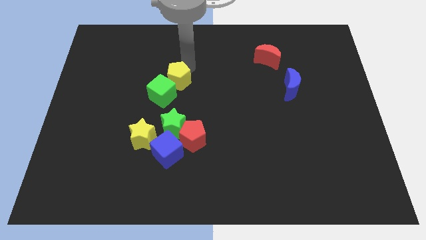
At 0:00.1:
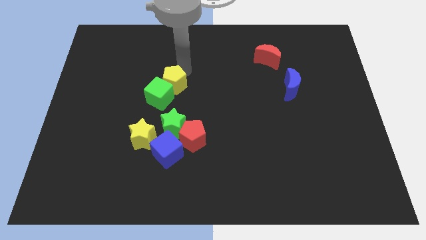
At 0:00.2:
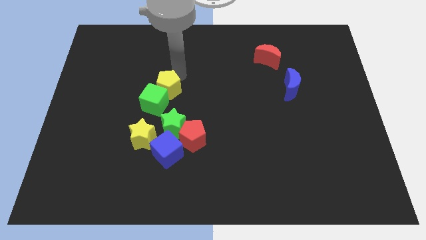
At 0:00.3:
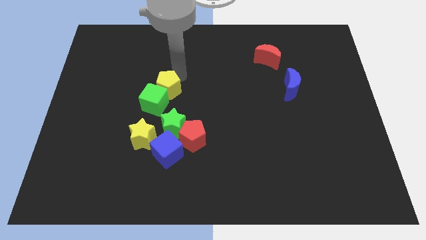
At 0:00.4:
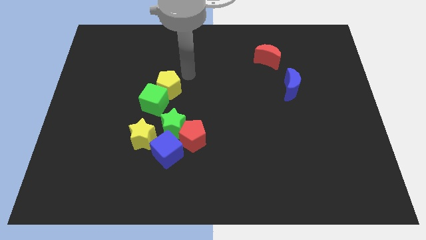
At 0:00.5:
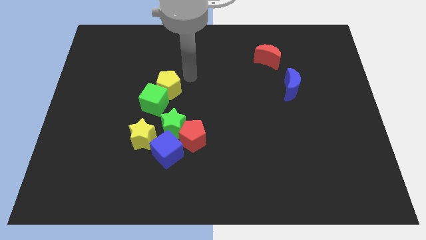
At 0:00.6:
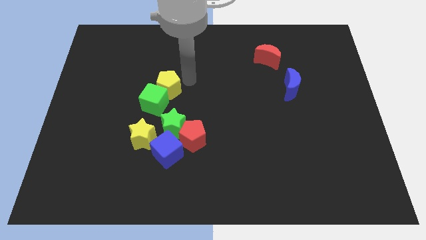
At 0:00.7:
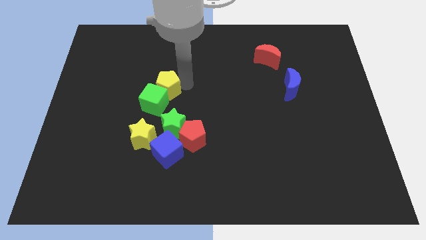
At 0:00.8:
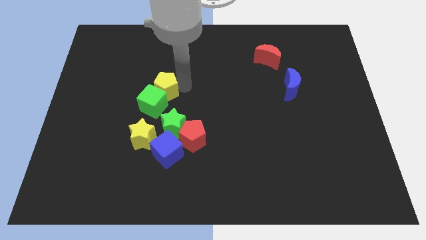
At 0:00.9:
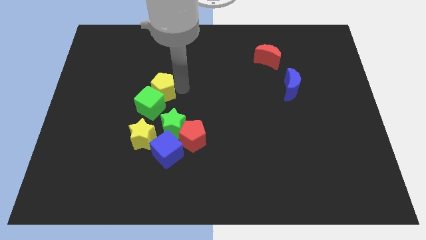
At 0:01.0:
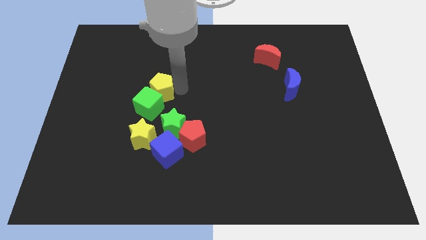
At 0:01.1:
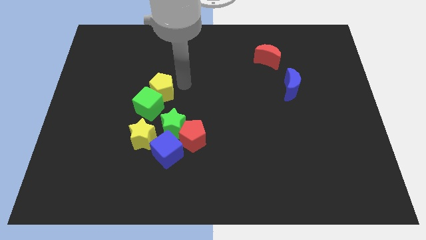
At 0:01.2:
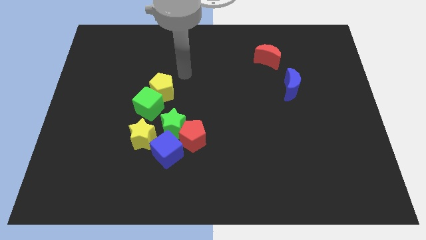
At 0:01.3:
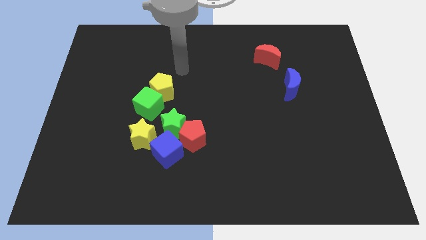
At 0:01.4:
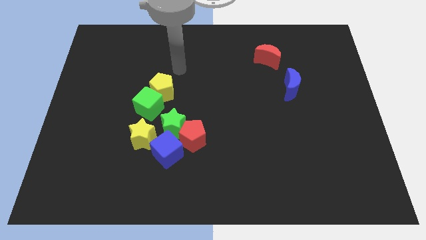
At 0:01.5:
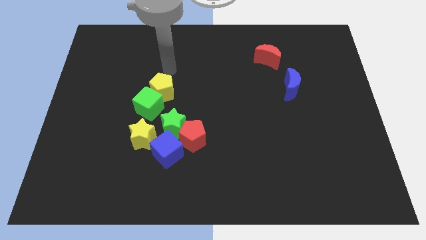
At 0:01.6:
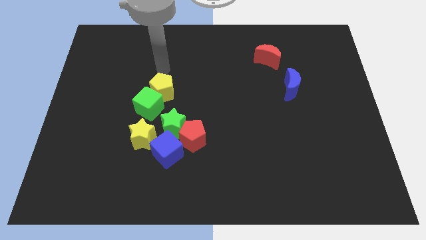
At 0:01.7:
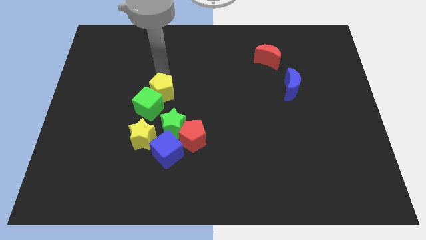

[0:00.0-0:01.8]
drag the yellow pentagon and green cube to the center

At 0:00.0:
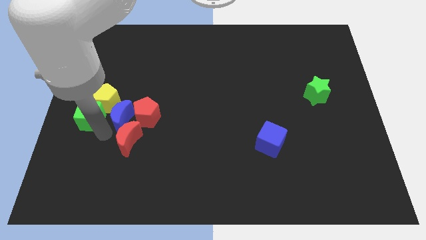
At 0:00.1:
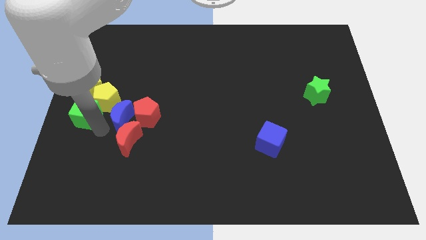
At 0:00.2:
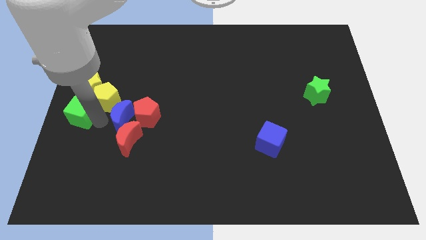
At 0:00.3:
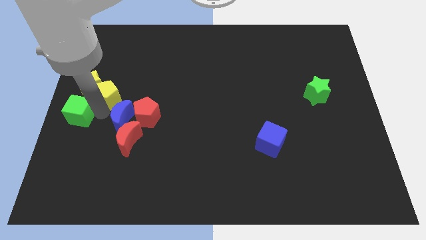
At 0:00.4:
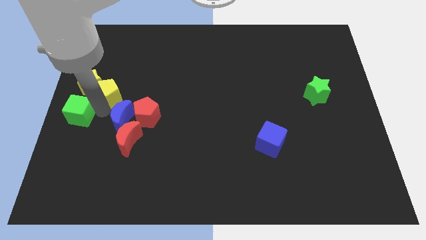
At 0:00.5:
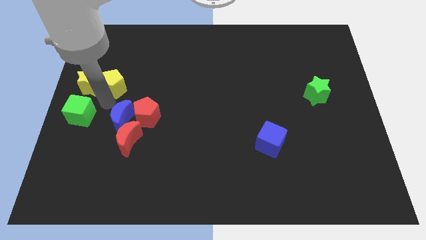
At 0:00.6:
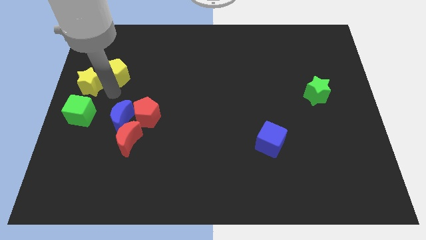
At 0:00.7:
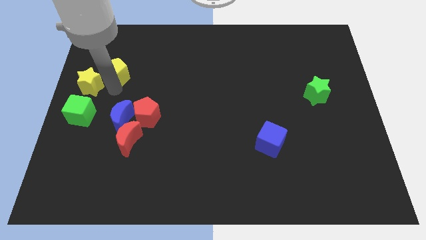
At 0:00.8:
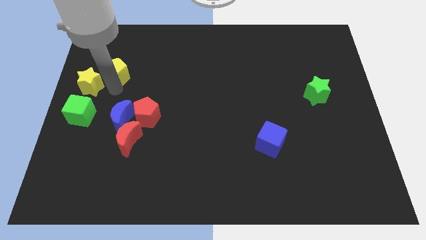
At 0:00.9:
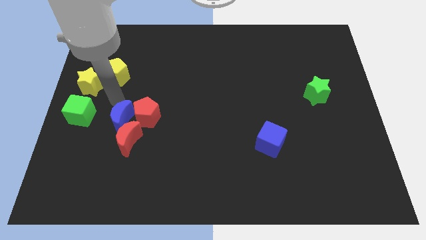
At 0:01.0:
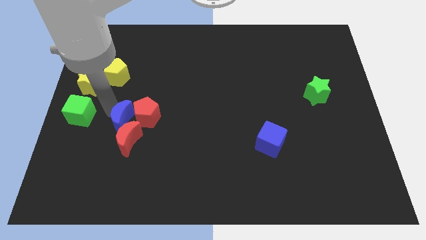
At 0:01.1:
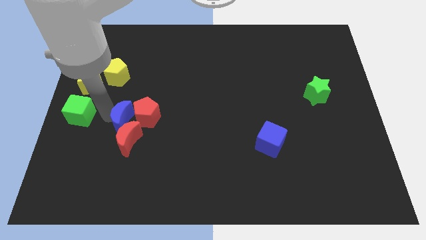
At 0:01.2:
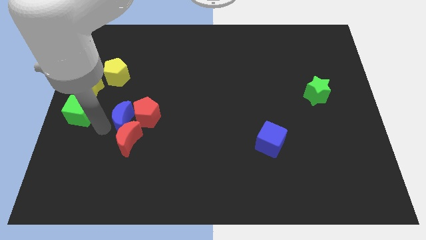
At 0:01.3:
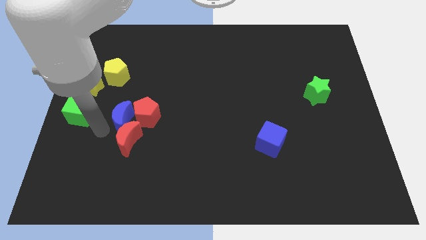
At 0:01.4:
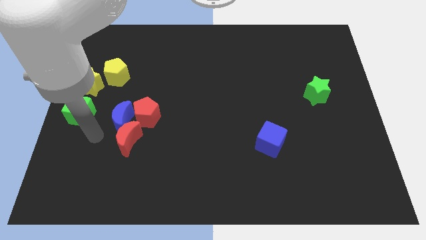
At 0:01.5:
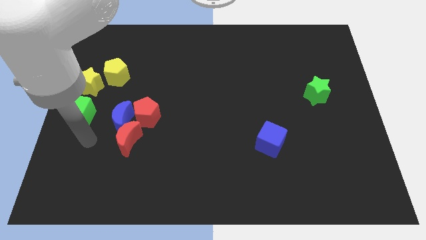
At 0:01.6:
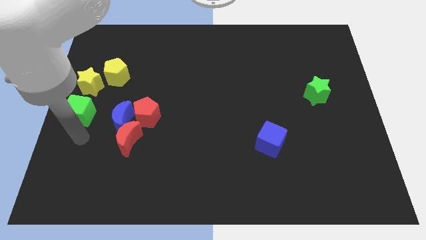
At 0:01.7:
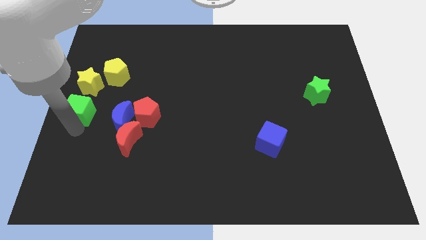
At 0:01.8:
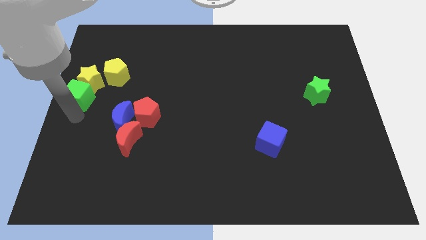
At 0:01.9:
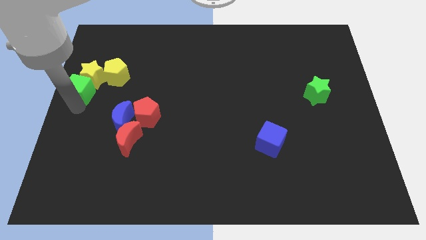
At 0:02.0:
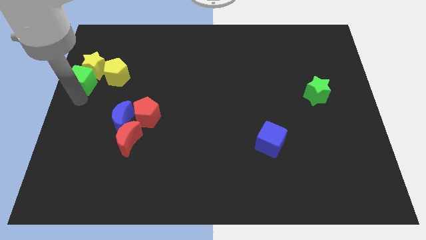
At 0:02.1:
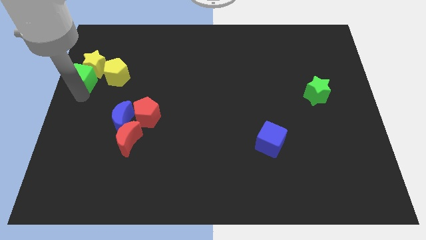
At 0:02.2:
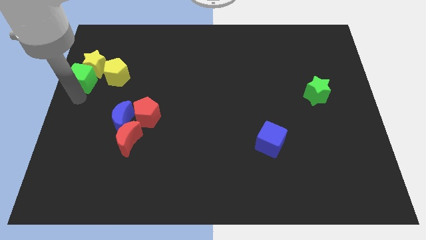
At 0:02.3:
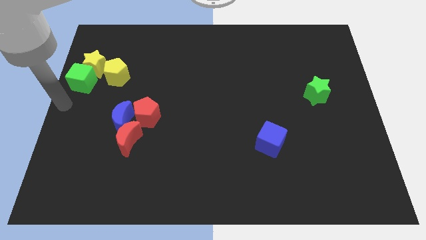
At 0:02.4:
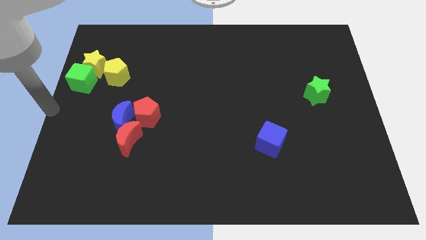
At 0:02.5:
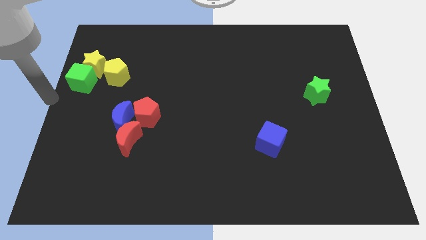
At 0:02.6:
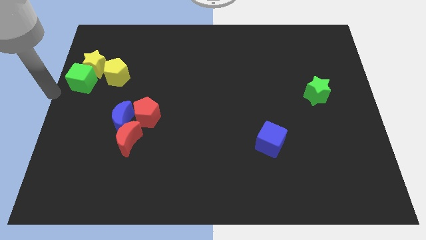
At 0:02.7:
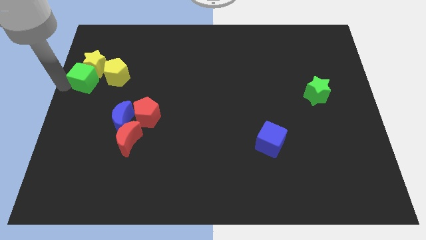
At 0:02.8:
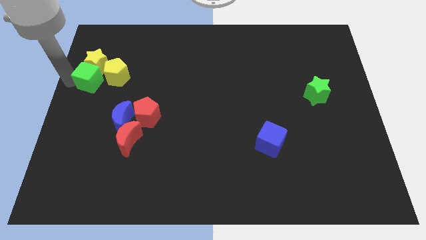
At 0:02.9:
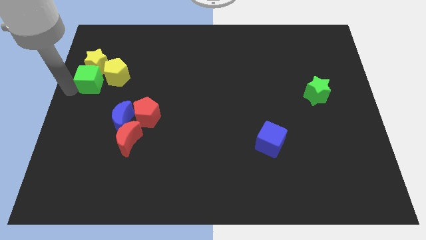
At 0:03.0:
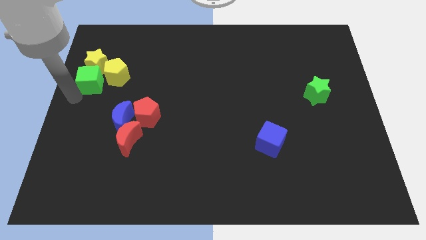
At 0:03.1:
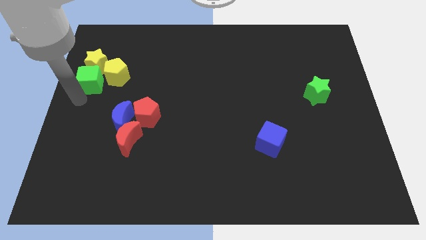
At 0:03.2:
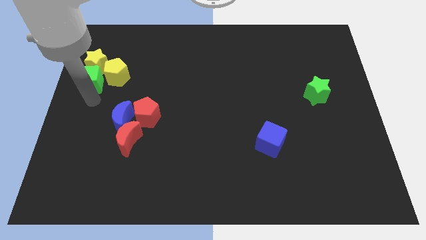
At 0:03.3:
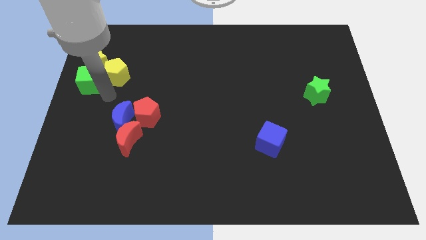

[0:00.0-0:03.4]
make a group out of yellow blocks and the green cube

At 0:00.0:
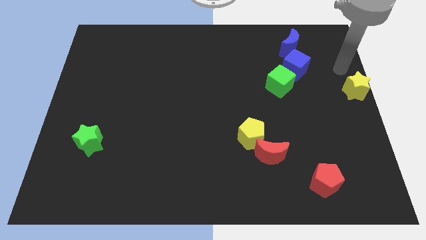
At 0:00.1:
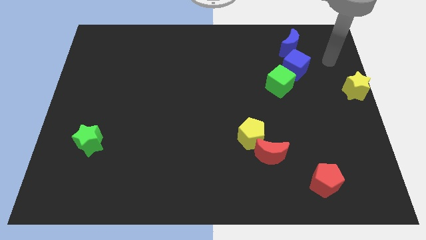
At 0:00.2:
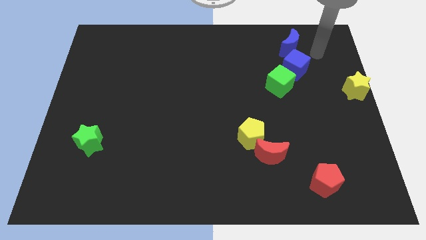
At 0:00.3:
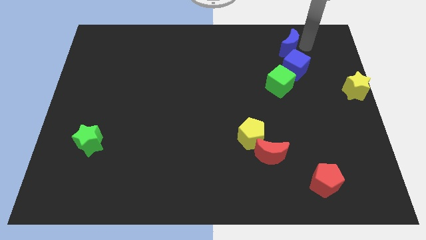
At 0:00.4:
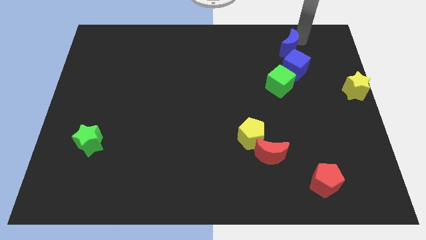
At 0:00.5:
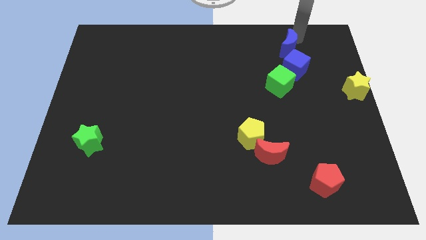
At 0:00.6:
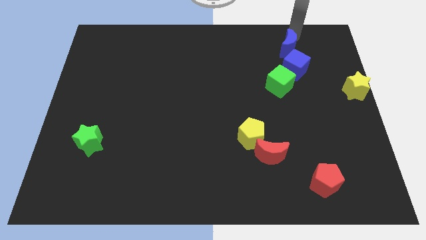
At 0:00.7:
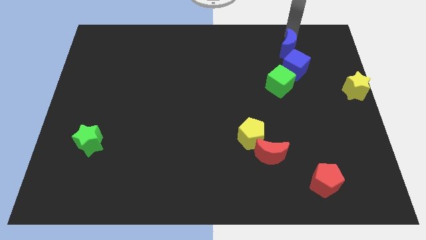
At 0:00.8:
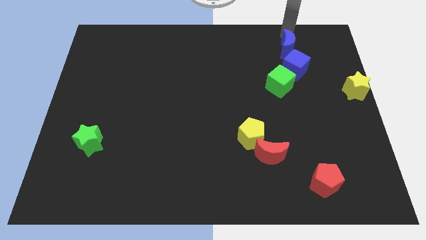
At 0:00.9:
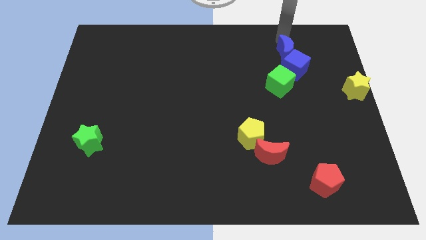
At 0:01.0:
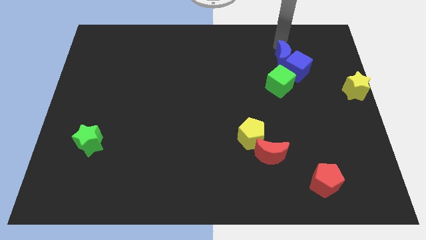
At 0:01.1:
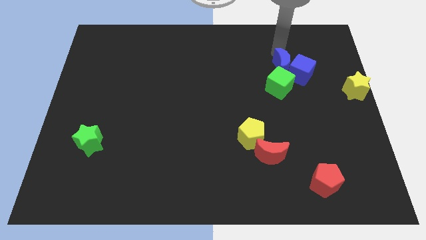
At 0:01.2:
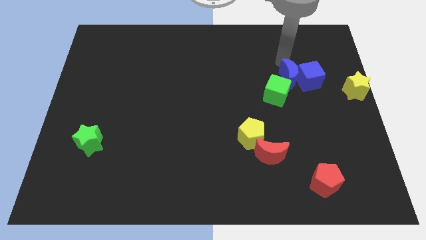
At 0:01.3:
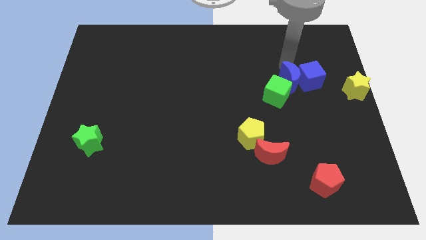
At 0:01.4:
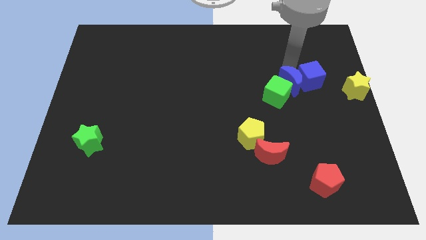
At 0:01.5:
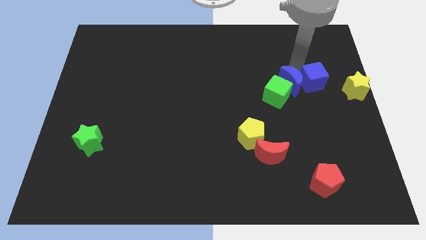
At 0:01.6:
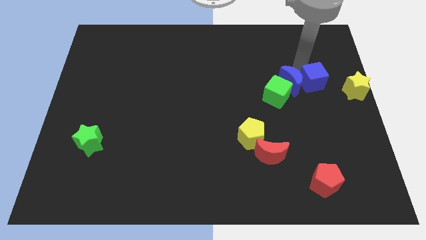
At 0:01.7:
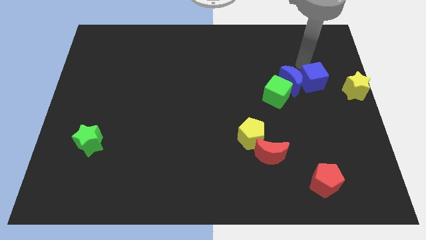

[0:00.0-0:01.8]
push the blue cube with the blue crescent towards the right center of the board

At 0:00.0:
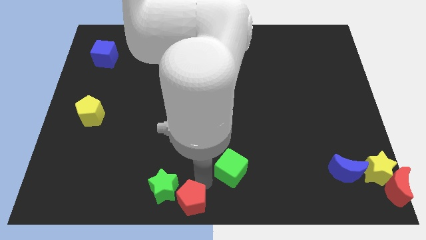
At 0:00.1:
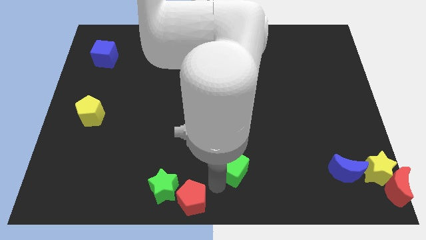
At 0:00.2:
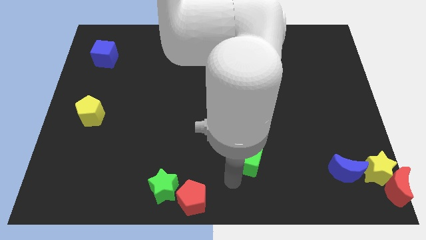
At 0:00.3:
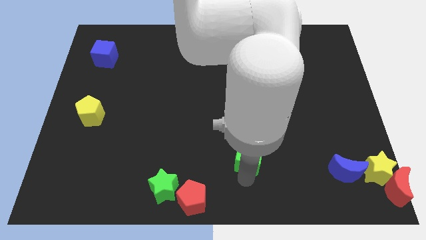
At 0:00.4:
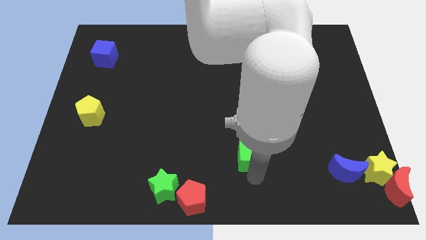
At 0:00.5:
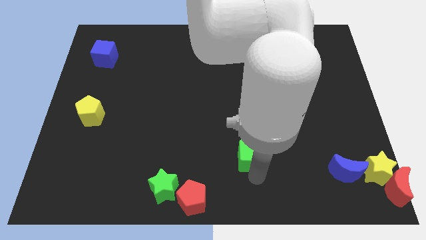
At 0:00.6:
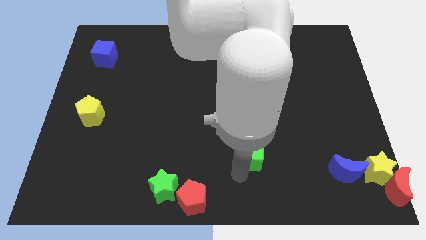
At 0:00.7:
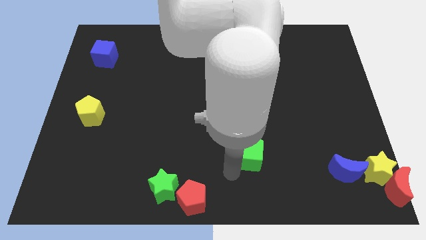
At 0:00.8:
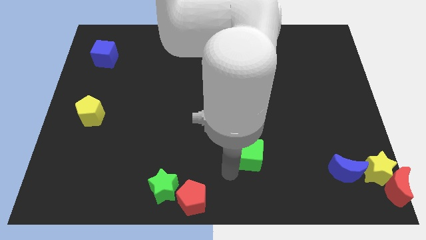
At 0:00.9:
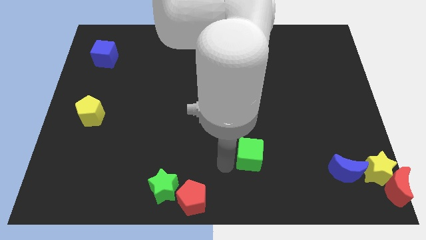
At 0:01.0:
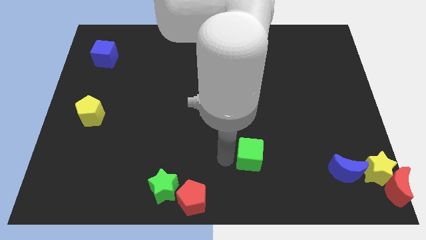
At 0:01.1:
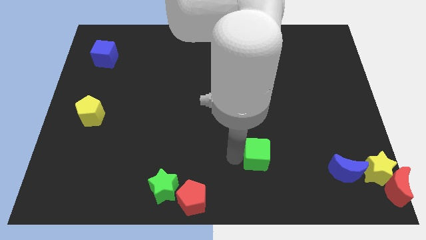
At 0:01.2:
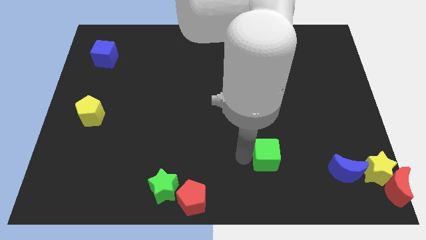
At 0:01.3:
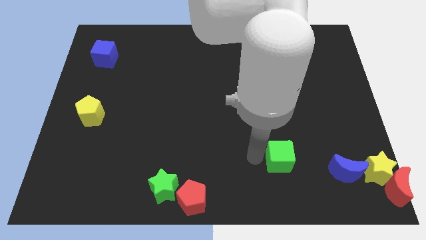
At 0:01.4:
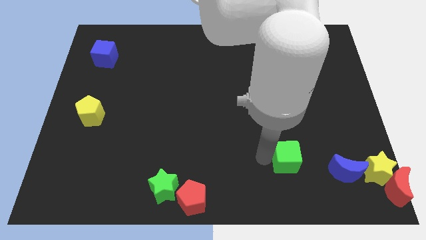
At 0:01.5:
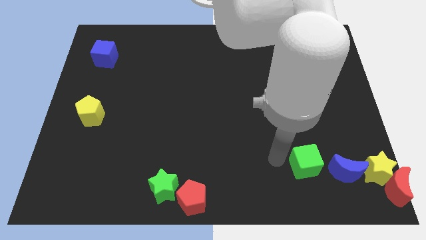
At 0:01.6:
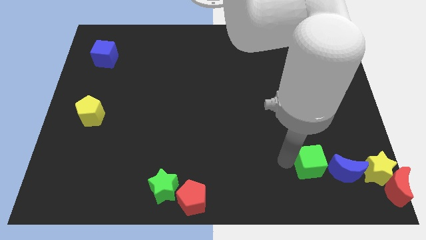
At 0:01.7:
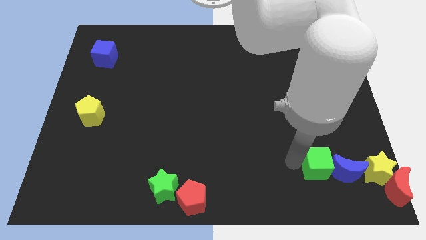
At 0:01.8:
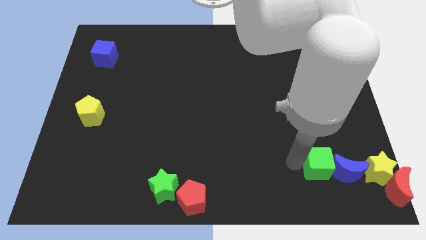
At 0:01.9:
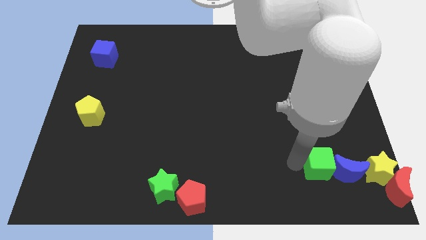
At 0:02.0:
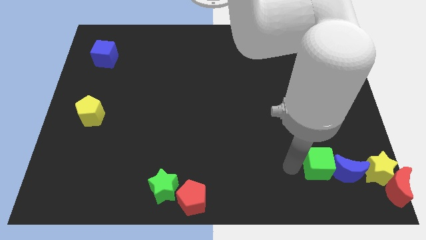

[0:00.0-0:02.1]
move the green cube to the left of blue crescent
